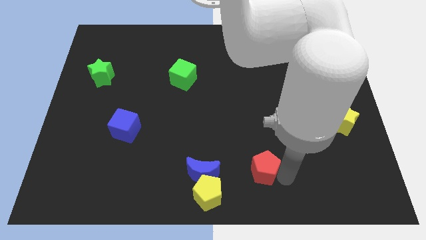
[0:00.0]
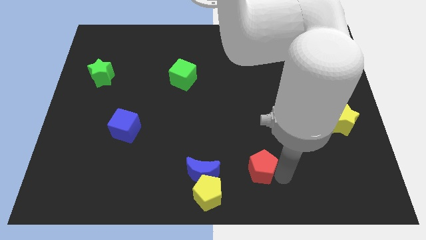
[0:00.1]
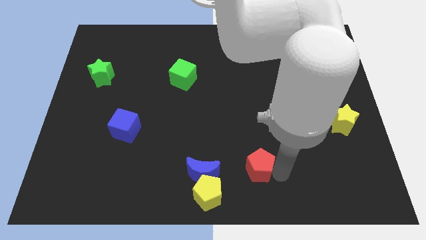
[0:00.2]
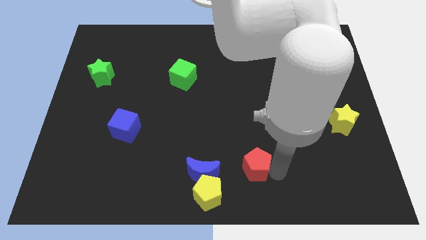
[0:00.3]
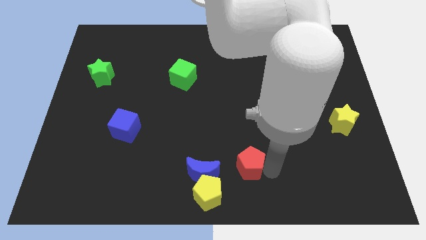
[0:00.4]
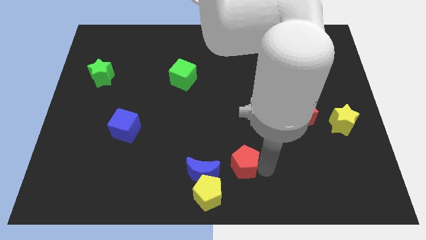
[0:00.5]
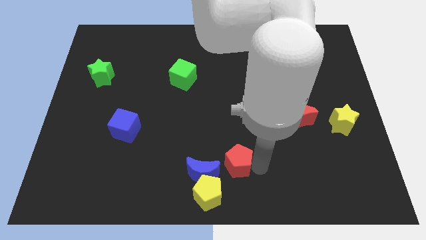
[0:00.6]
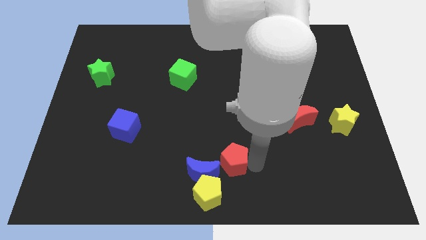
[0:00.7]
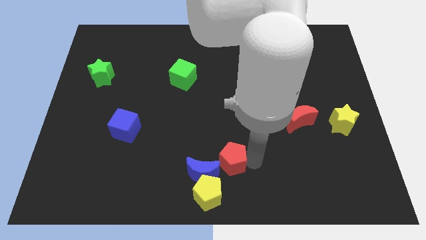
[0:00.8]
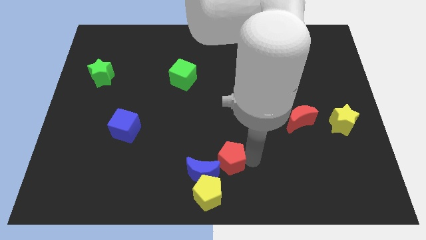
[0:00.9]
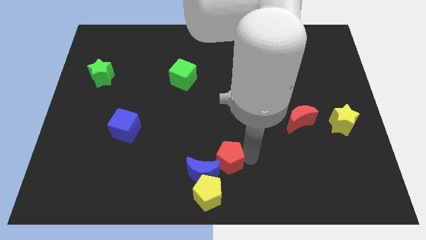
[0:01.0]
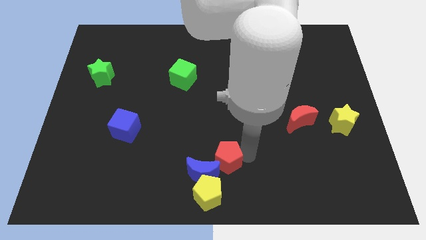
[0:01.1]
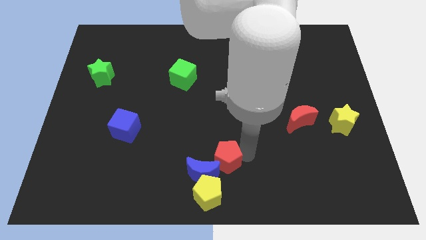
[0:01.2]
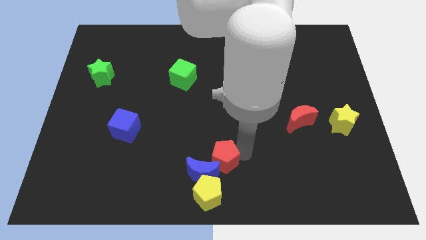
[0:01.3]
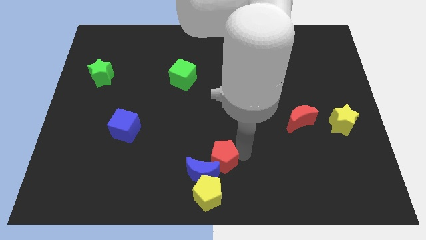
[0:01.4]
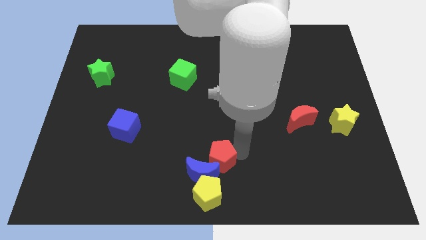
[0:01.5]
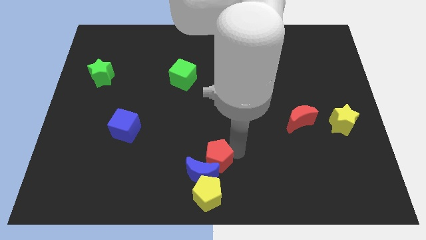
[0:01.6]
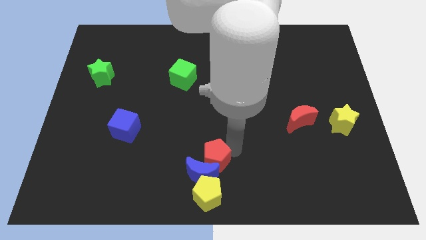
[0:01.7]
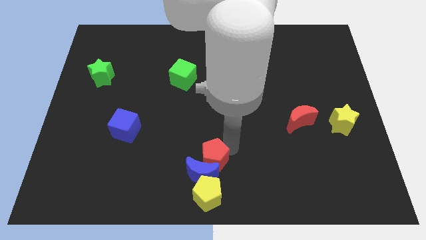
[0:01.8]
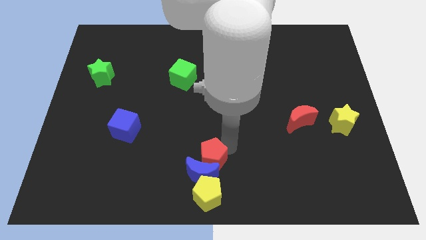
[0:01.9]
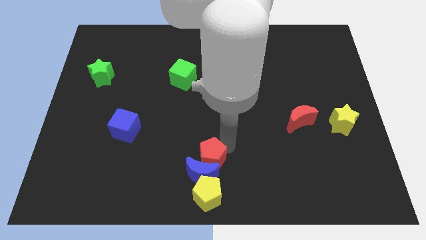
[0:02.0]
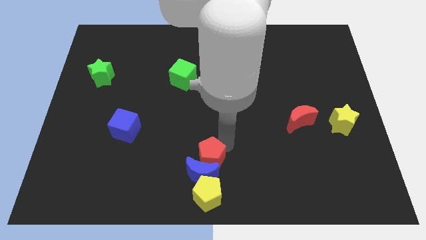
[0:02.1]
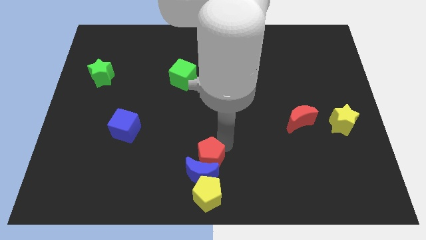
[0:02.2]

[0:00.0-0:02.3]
place the red pentagon into the blue crescent

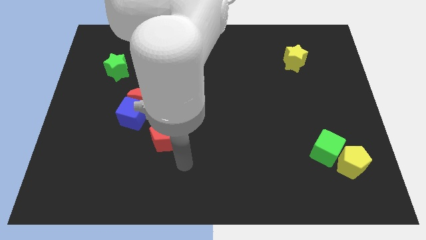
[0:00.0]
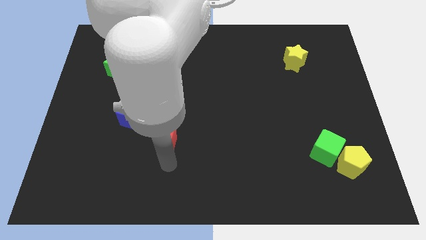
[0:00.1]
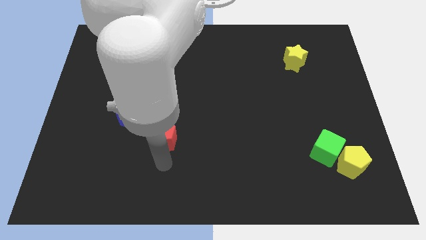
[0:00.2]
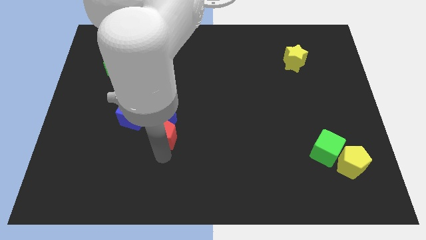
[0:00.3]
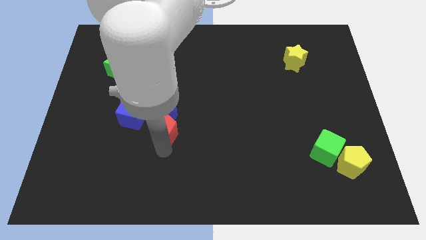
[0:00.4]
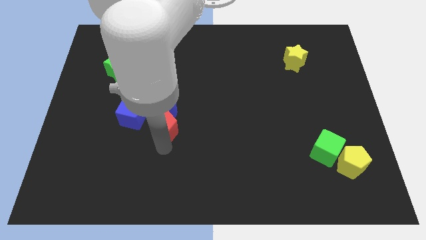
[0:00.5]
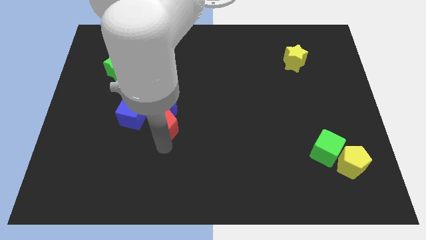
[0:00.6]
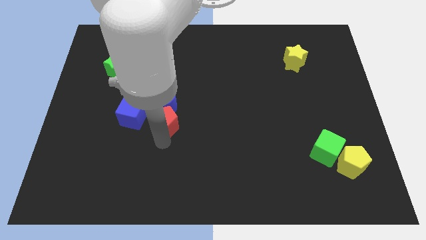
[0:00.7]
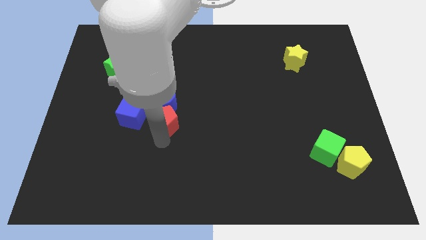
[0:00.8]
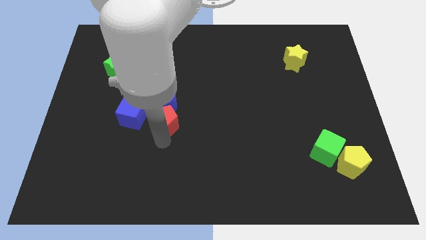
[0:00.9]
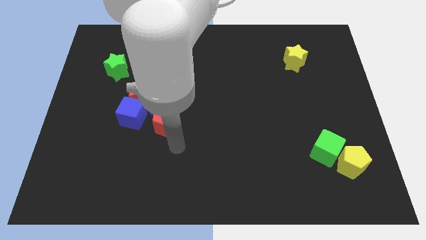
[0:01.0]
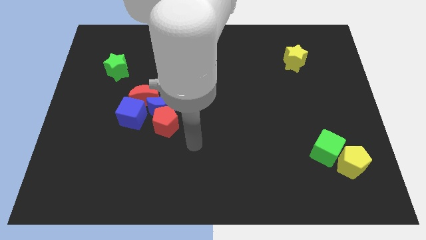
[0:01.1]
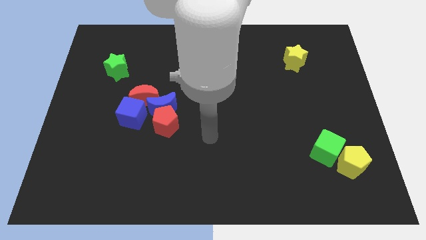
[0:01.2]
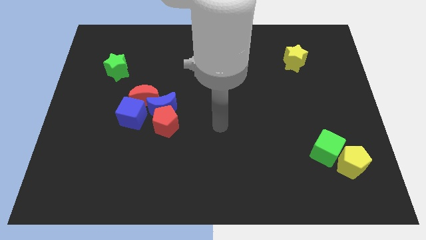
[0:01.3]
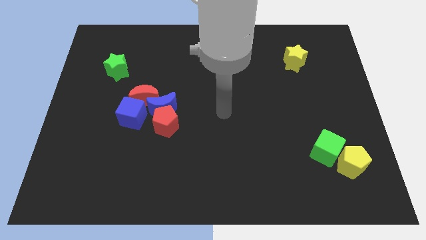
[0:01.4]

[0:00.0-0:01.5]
place red pentagon below blue moon

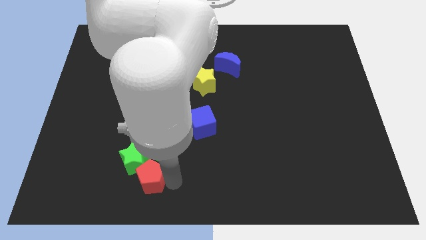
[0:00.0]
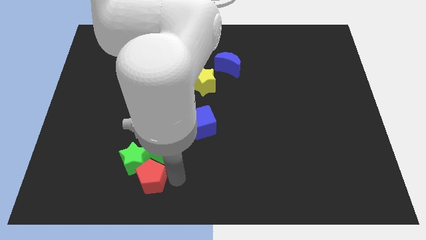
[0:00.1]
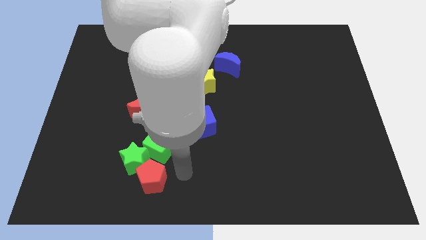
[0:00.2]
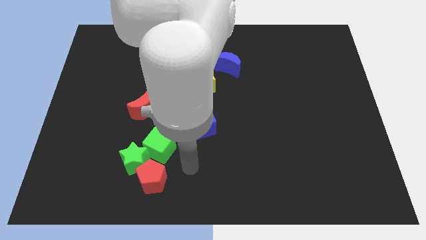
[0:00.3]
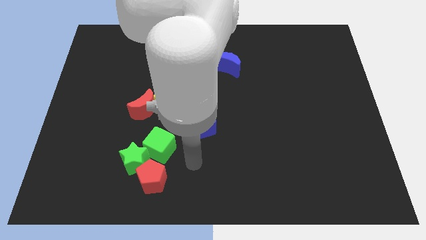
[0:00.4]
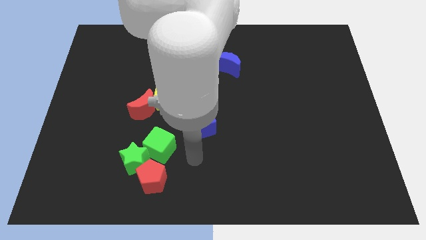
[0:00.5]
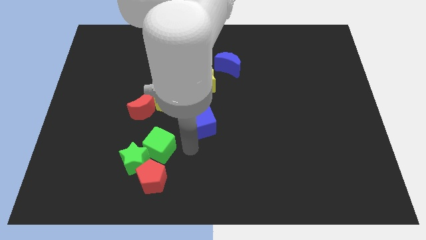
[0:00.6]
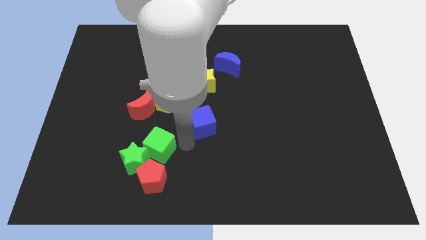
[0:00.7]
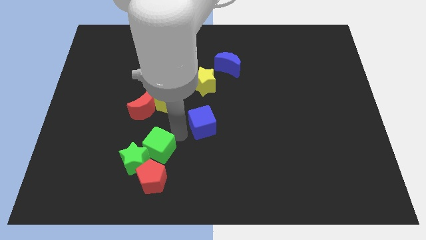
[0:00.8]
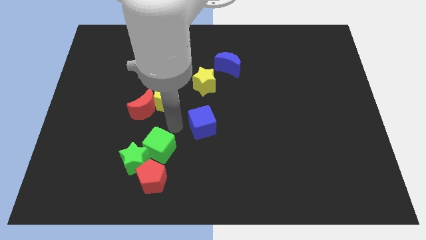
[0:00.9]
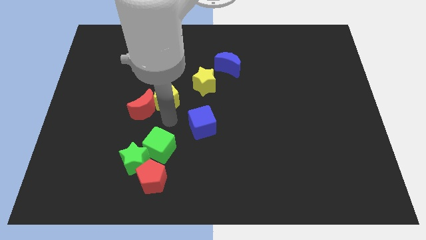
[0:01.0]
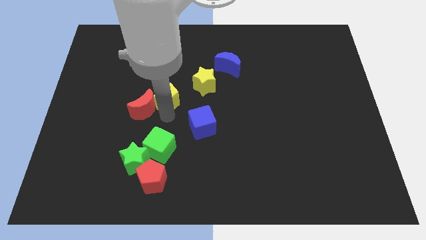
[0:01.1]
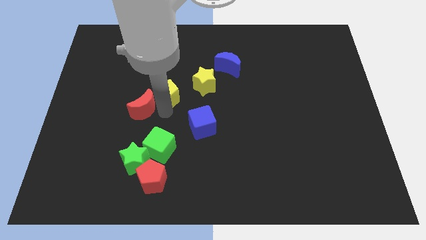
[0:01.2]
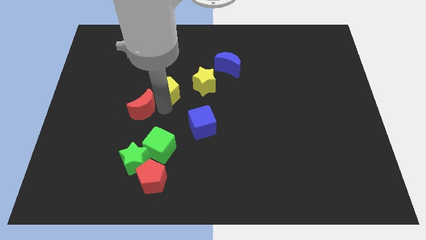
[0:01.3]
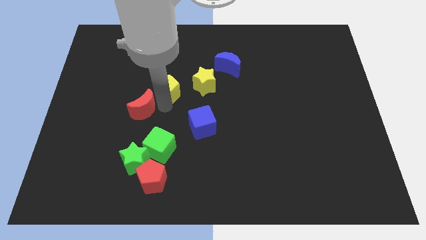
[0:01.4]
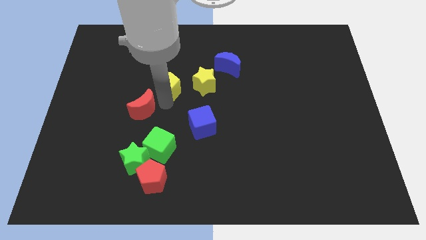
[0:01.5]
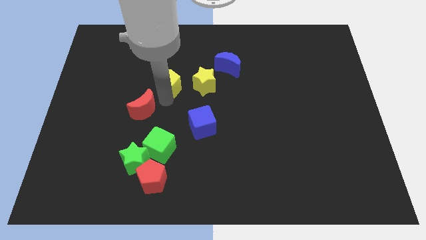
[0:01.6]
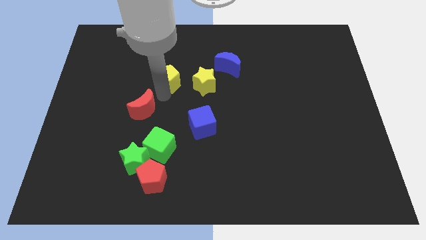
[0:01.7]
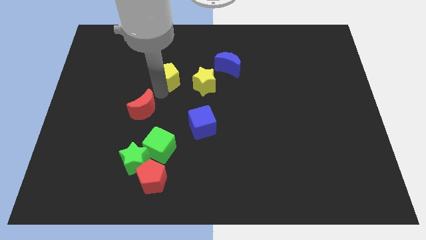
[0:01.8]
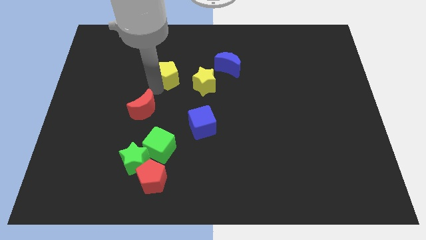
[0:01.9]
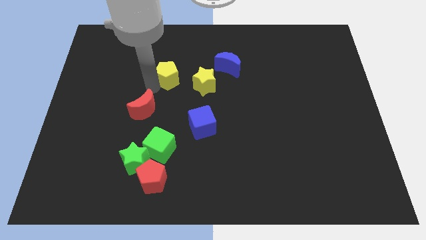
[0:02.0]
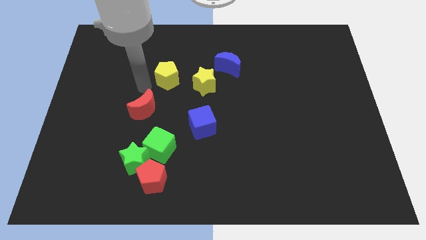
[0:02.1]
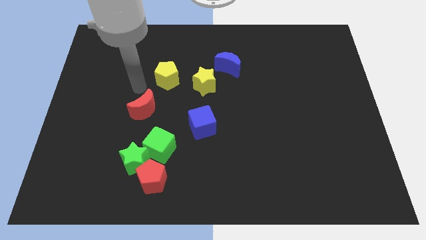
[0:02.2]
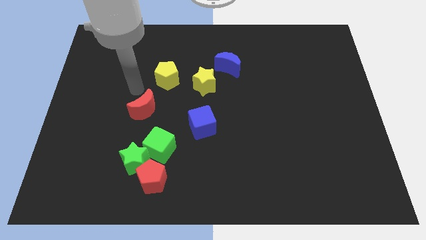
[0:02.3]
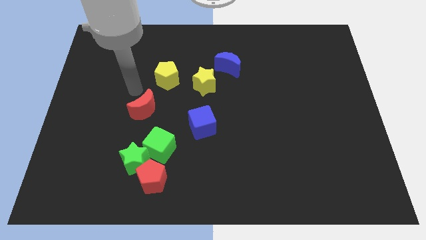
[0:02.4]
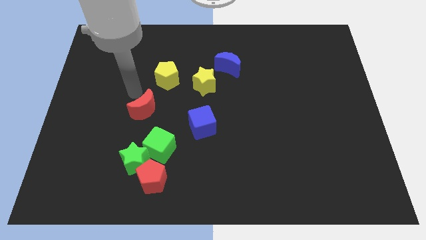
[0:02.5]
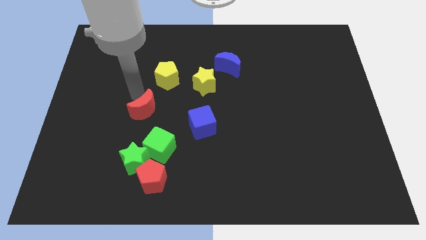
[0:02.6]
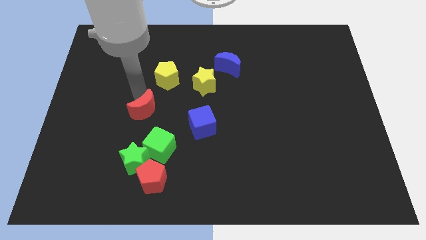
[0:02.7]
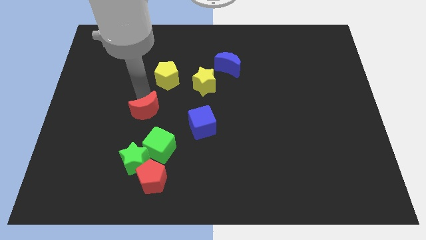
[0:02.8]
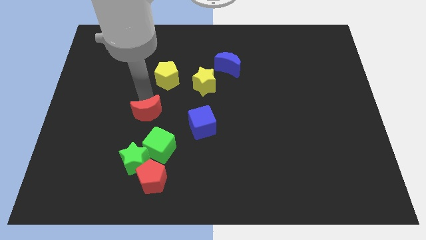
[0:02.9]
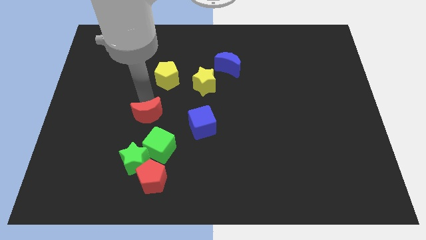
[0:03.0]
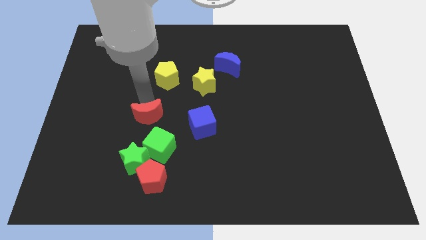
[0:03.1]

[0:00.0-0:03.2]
move yellow pentagon slightly along with red crescent

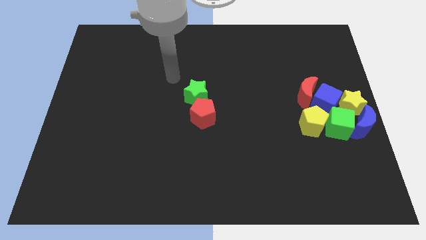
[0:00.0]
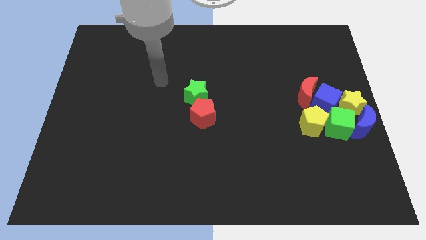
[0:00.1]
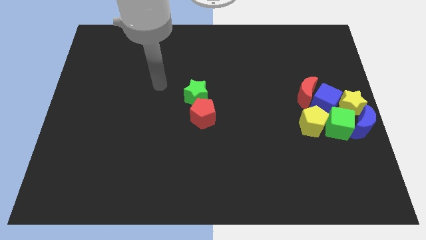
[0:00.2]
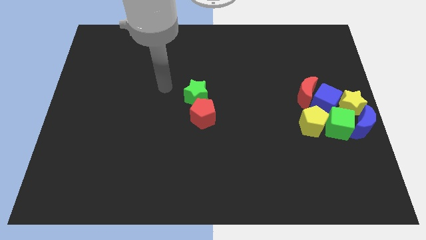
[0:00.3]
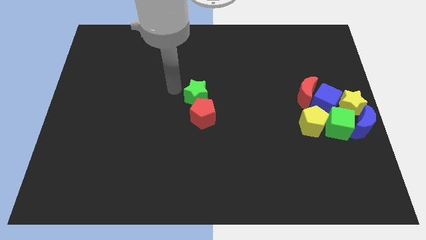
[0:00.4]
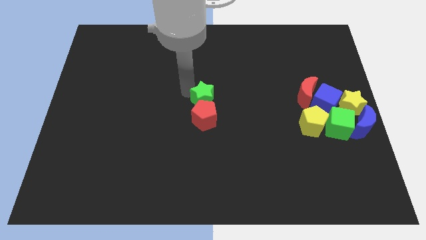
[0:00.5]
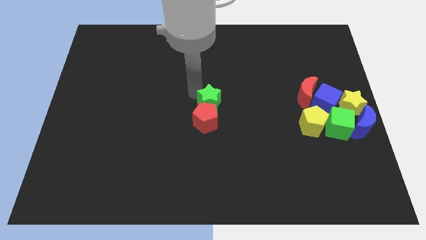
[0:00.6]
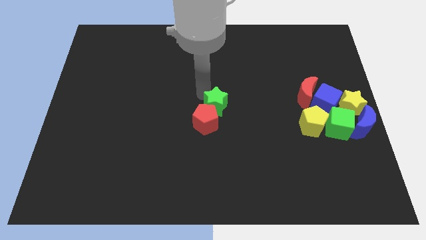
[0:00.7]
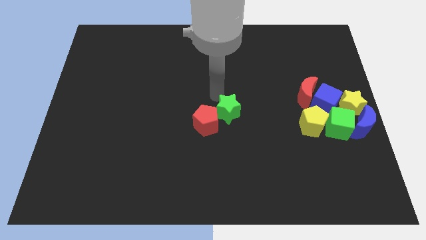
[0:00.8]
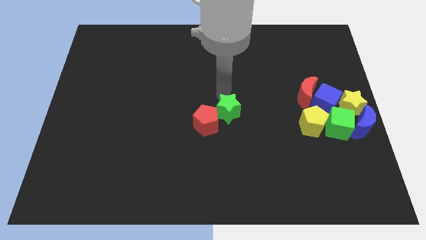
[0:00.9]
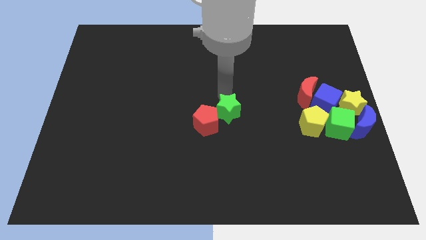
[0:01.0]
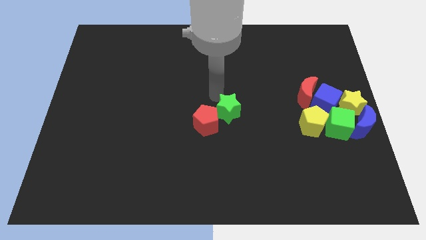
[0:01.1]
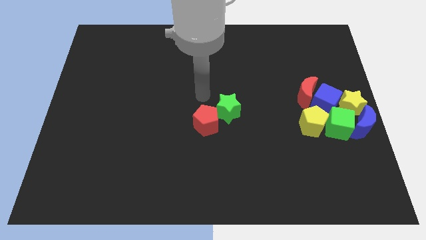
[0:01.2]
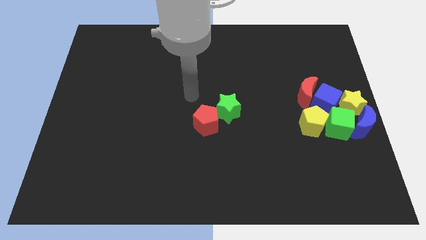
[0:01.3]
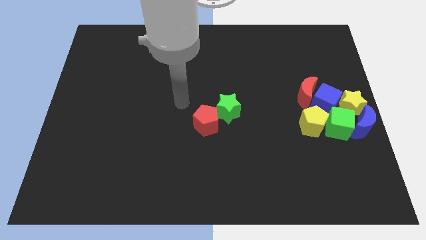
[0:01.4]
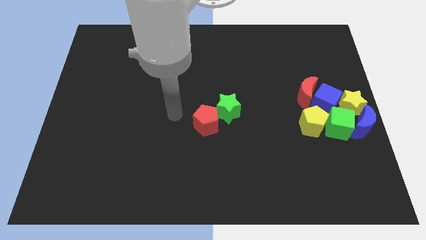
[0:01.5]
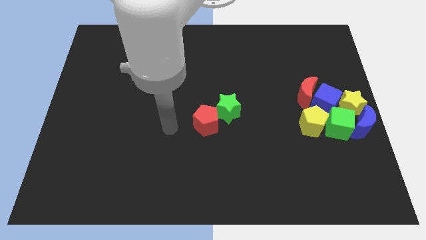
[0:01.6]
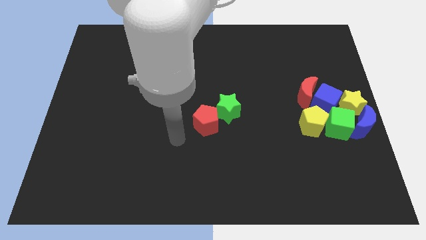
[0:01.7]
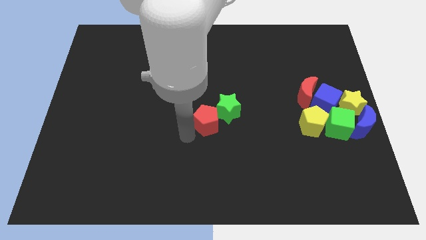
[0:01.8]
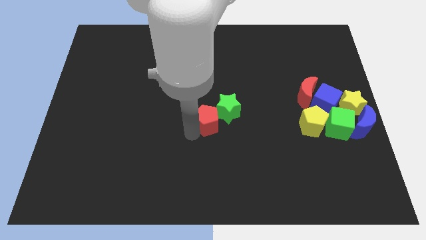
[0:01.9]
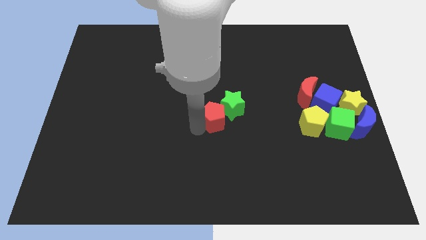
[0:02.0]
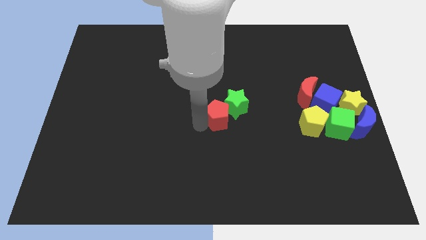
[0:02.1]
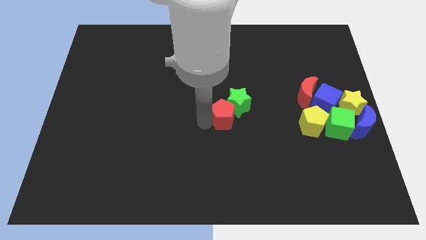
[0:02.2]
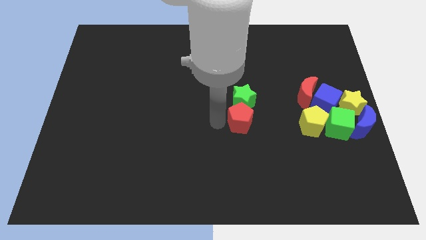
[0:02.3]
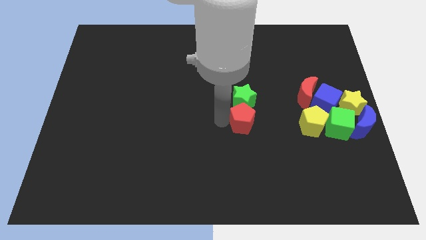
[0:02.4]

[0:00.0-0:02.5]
push red pentagon below green star
